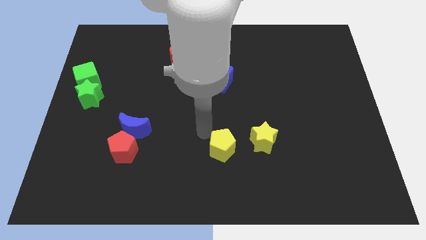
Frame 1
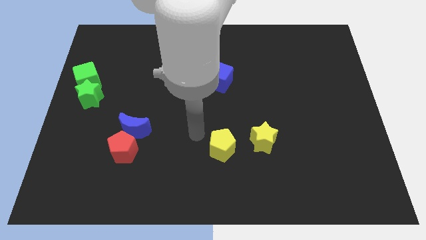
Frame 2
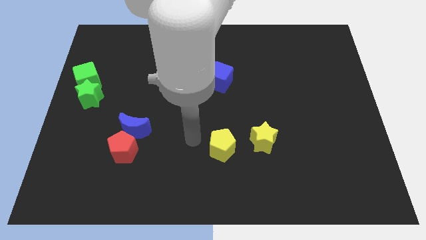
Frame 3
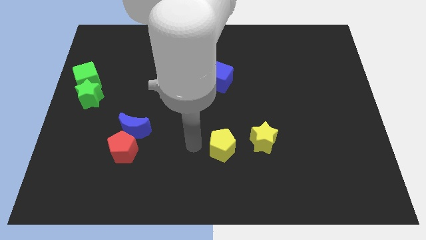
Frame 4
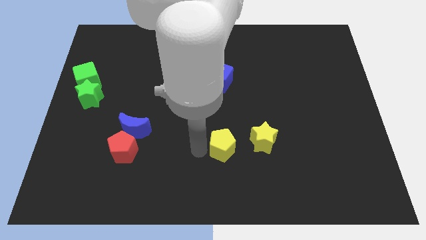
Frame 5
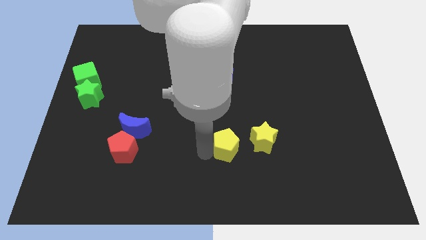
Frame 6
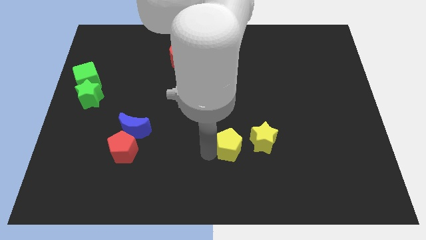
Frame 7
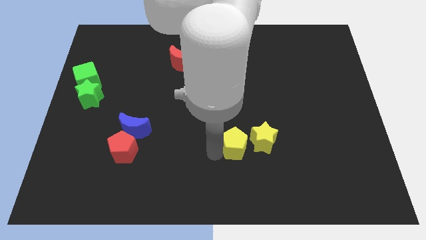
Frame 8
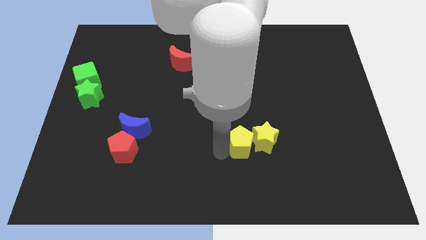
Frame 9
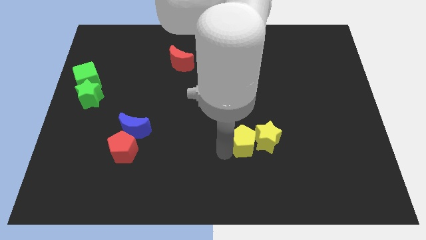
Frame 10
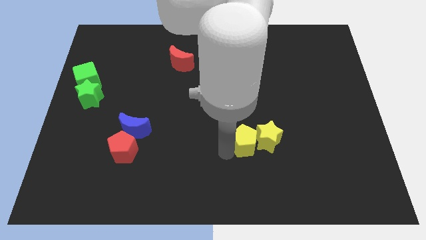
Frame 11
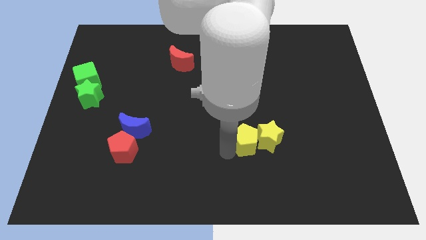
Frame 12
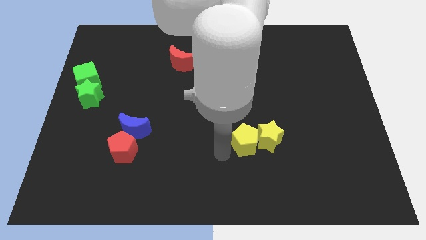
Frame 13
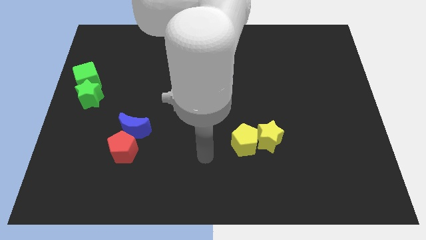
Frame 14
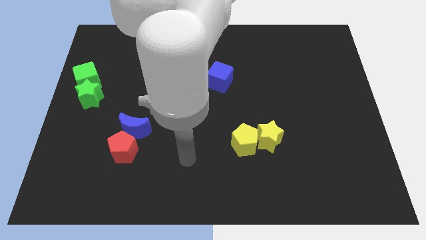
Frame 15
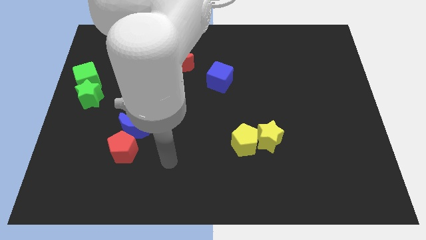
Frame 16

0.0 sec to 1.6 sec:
push the yellow pentagon into the yellow star

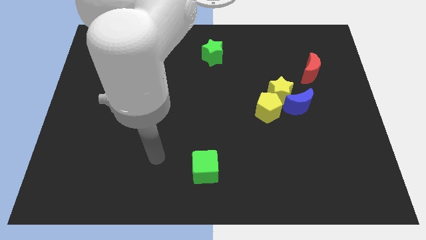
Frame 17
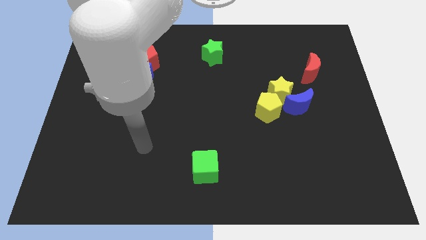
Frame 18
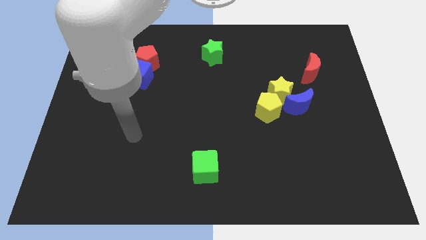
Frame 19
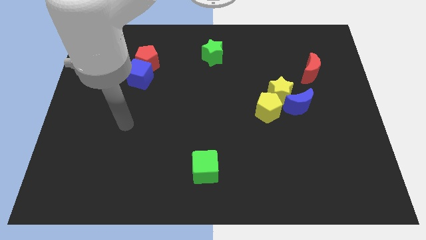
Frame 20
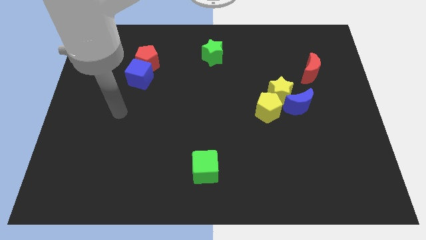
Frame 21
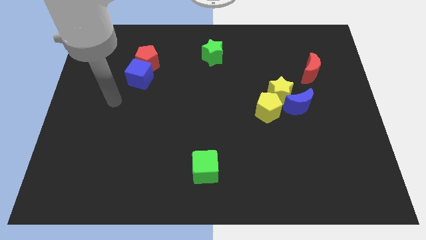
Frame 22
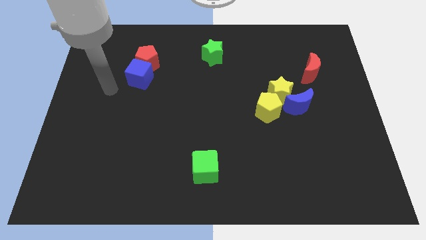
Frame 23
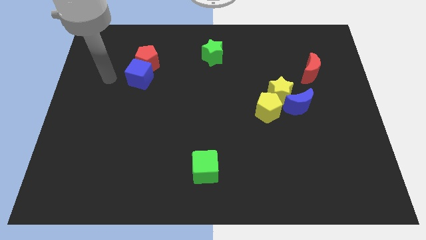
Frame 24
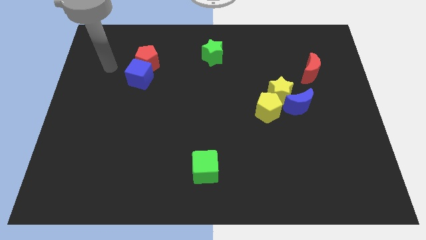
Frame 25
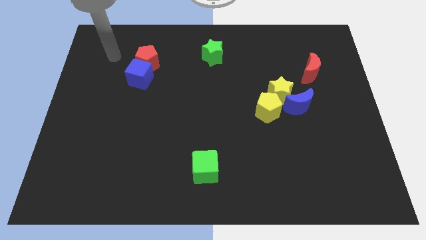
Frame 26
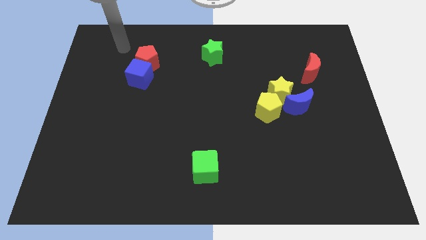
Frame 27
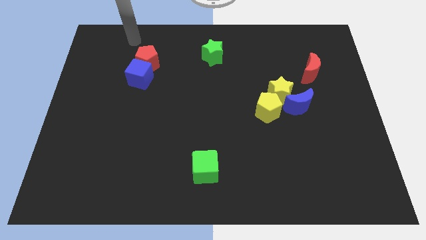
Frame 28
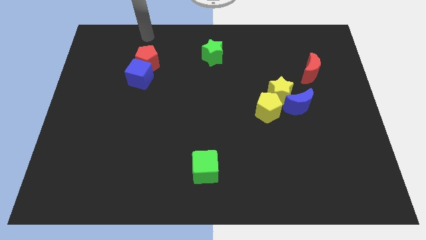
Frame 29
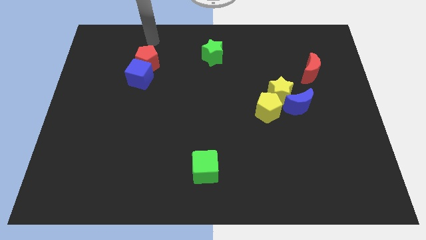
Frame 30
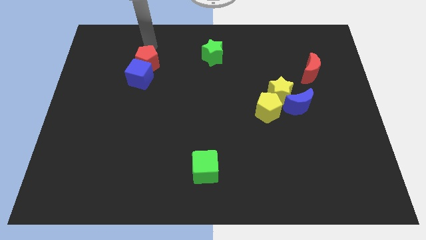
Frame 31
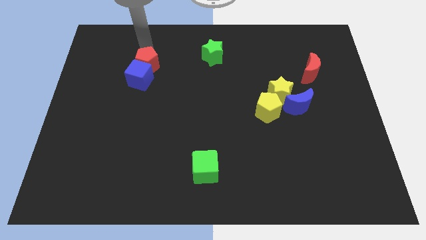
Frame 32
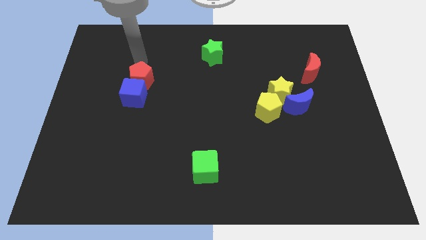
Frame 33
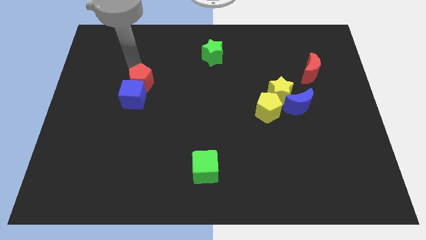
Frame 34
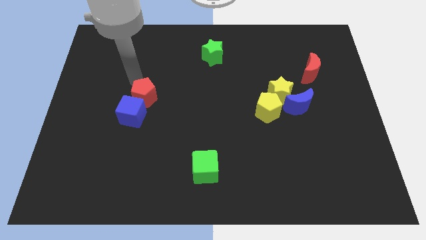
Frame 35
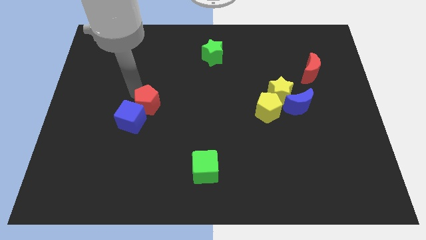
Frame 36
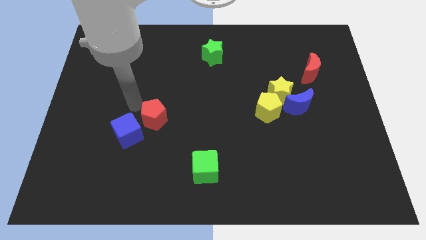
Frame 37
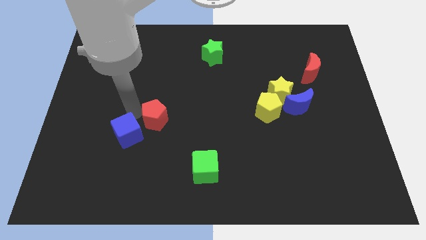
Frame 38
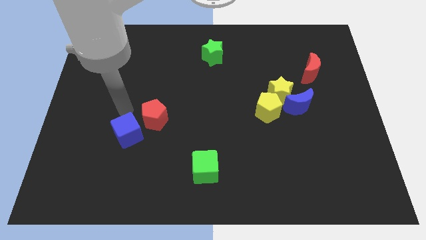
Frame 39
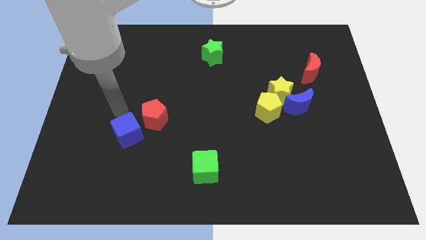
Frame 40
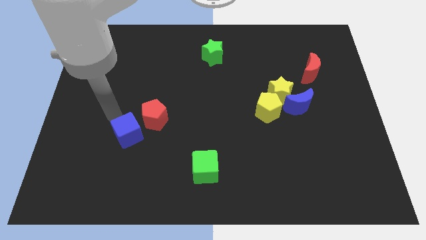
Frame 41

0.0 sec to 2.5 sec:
push red pentagon in to blue cube

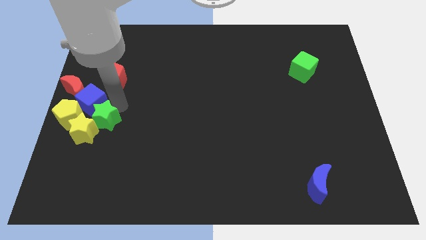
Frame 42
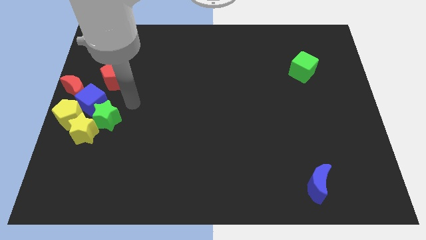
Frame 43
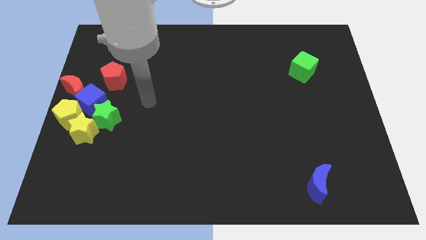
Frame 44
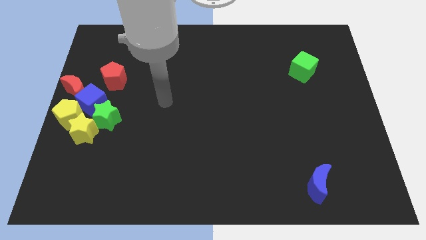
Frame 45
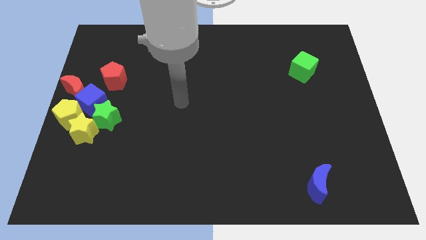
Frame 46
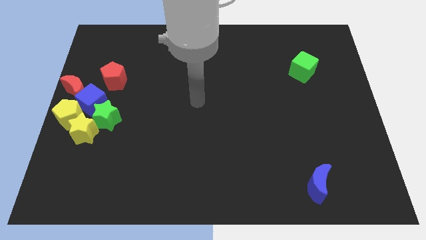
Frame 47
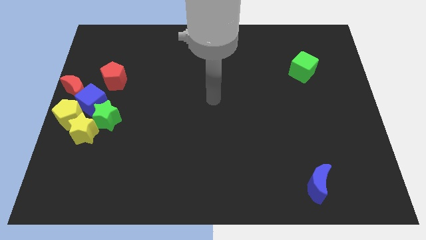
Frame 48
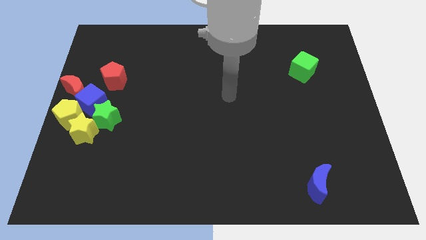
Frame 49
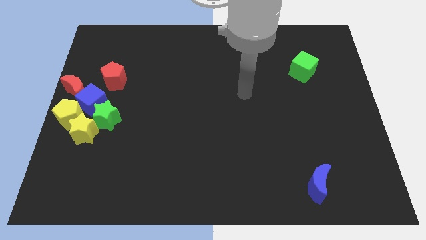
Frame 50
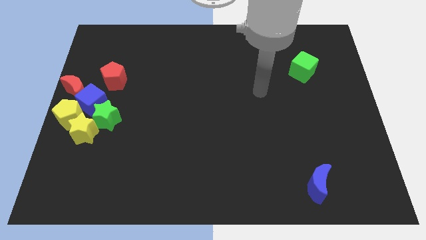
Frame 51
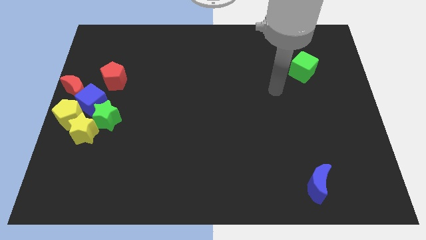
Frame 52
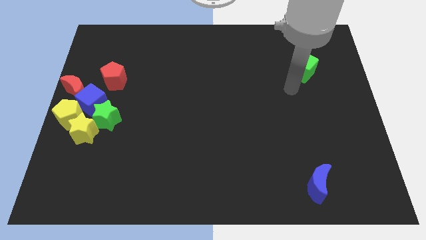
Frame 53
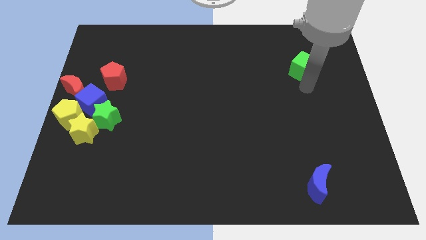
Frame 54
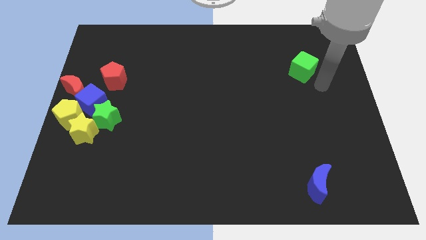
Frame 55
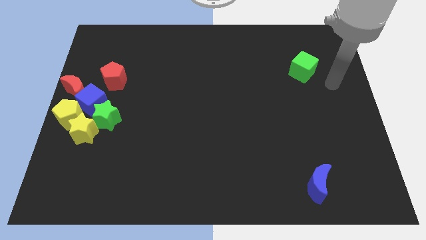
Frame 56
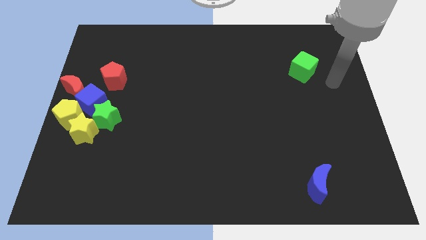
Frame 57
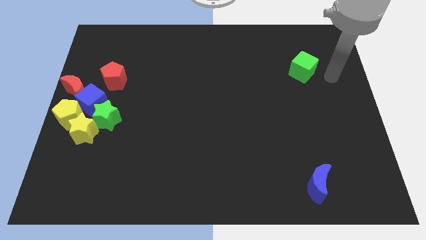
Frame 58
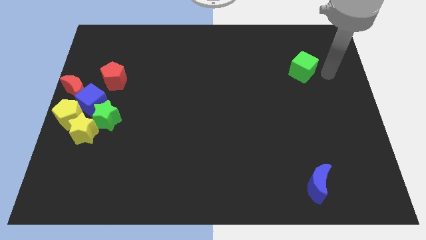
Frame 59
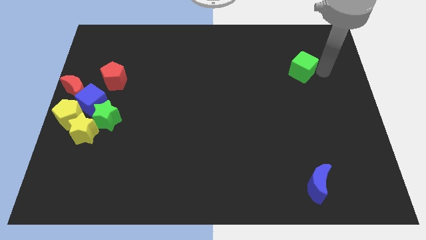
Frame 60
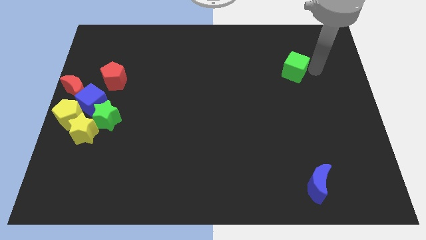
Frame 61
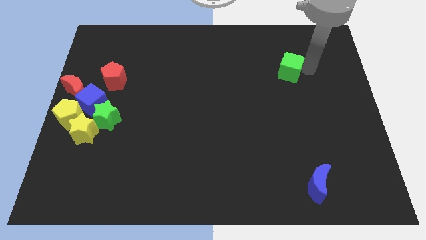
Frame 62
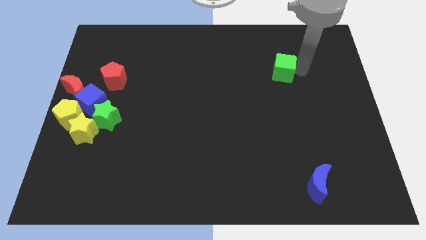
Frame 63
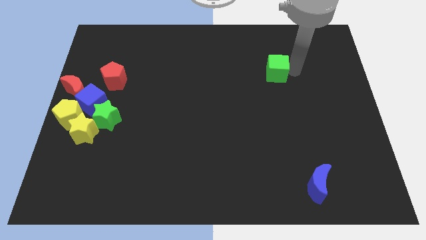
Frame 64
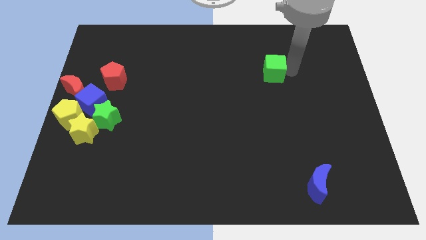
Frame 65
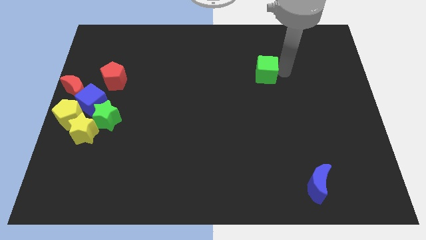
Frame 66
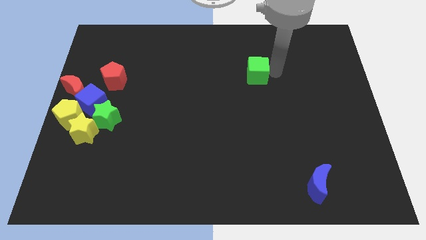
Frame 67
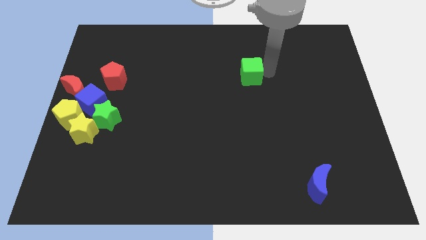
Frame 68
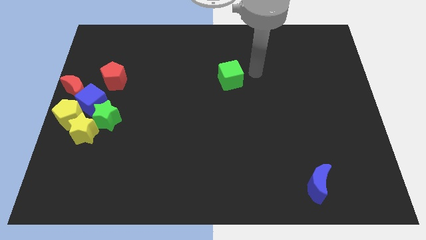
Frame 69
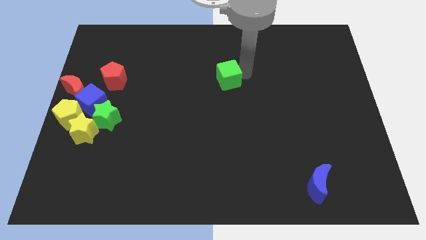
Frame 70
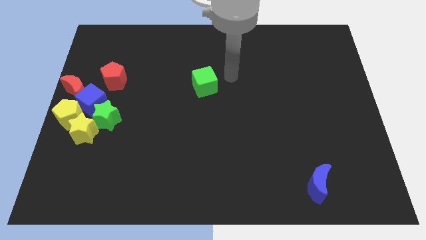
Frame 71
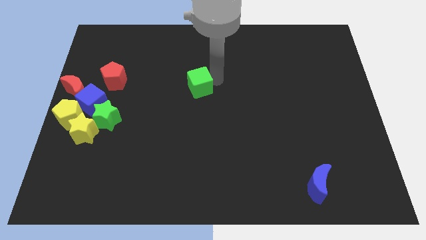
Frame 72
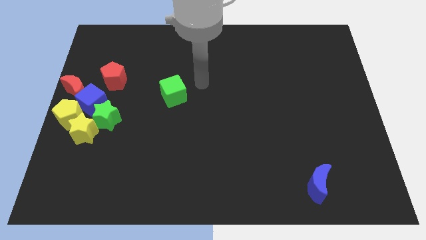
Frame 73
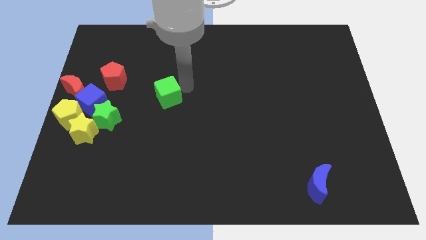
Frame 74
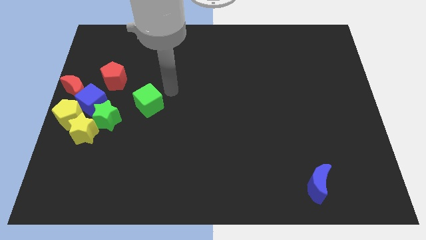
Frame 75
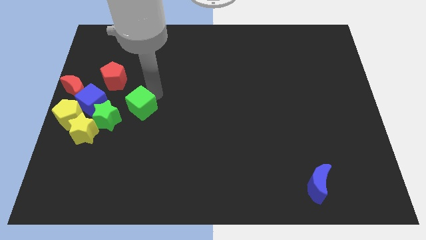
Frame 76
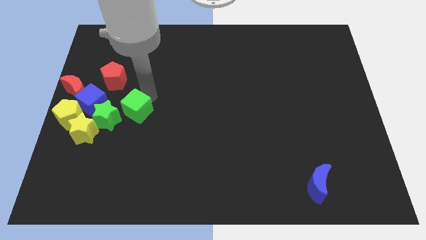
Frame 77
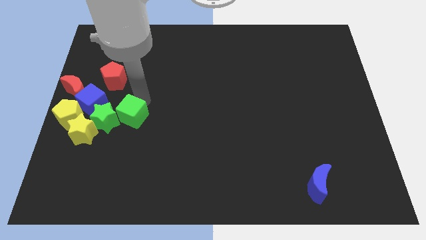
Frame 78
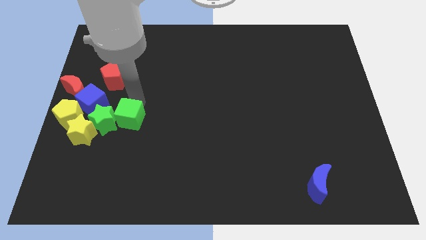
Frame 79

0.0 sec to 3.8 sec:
slide the greencube into the right side of the green star

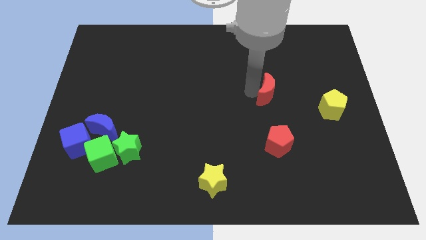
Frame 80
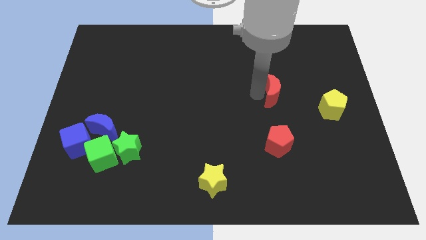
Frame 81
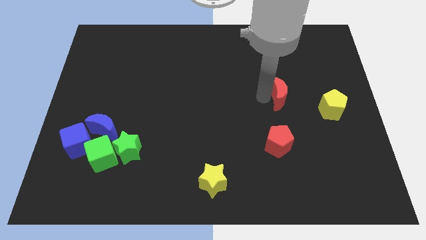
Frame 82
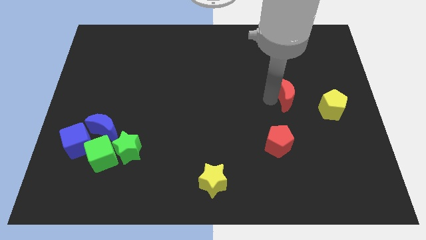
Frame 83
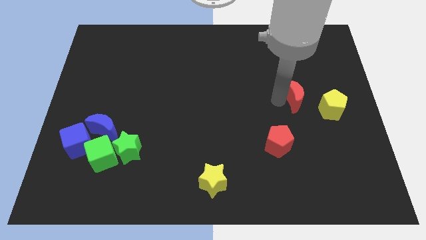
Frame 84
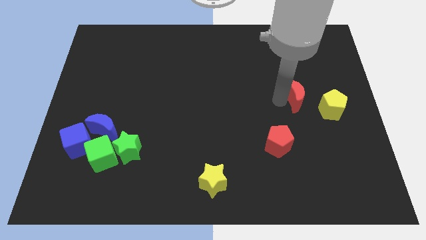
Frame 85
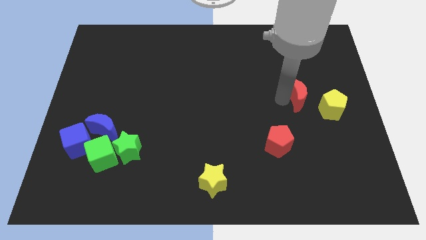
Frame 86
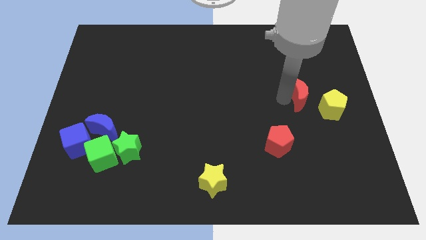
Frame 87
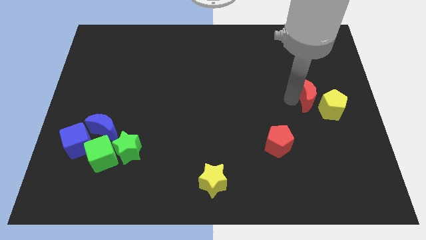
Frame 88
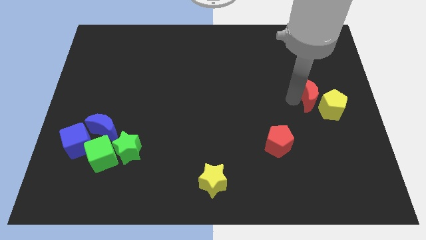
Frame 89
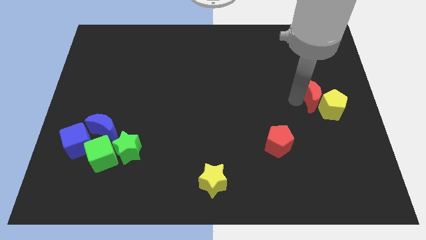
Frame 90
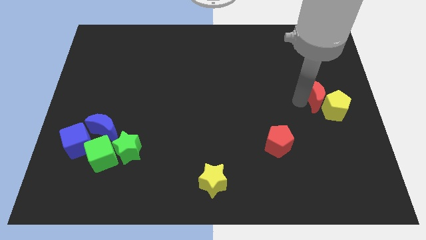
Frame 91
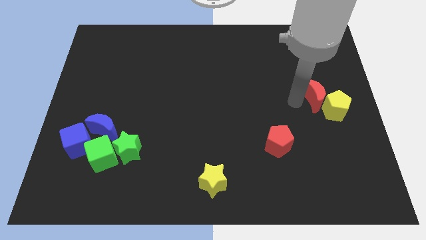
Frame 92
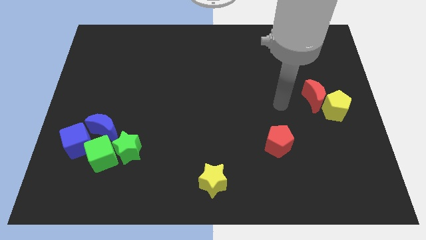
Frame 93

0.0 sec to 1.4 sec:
push the red crescent into the yellow pentagon towards the right center of the board
